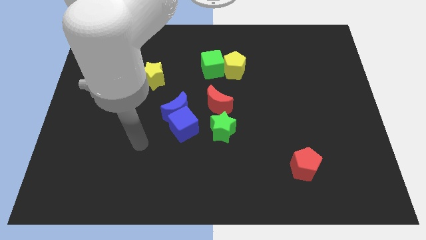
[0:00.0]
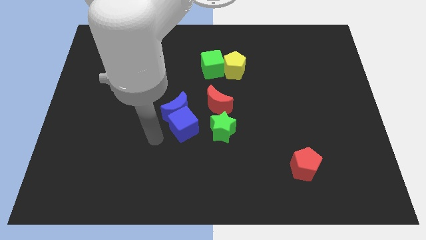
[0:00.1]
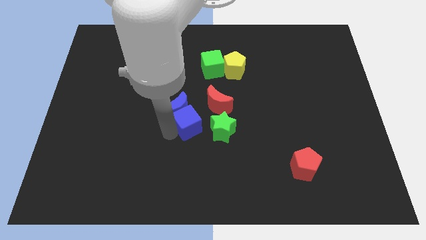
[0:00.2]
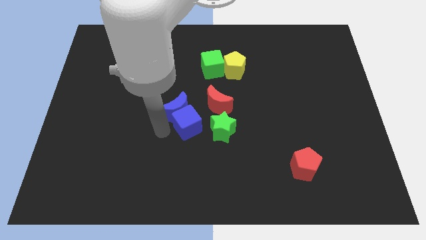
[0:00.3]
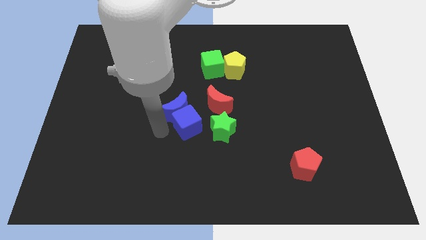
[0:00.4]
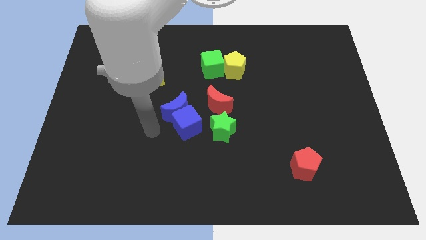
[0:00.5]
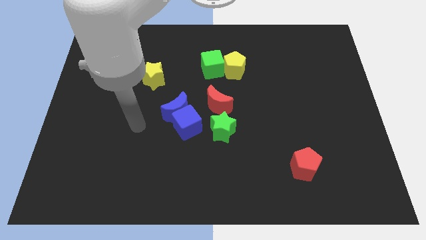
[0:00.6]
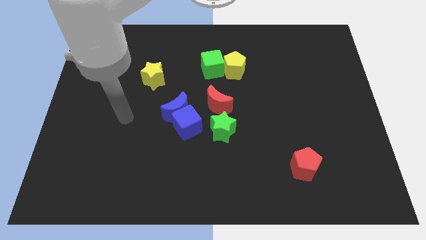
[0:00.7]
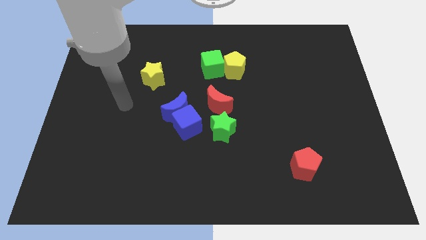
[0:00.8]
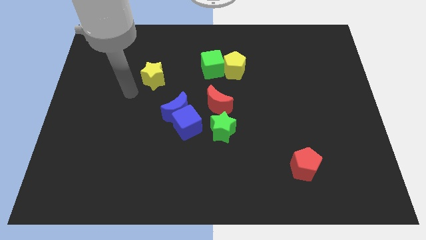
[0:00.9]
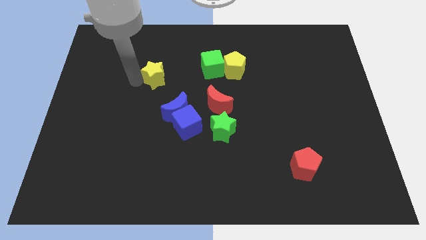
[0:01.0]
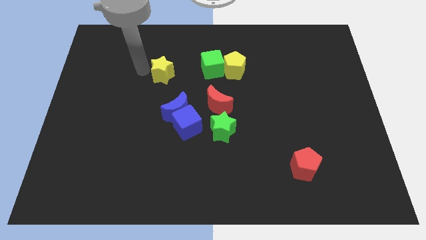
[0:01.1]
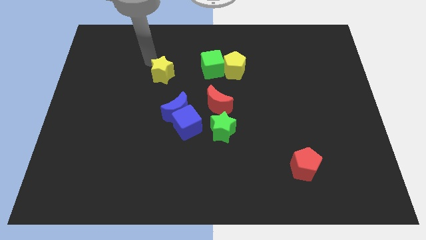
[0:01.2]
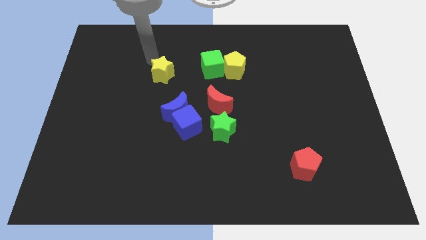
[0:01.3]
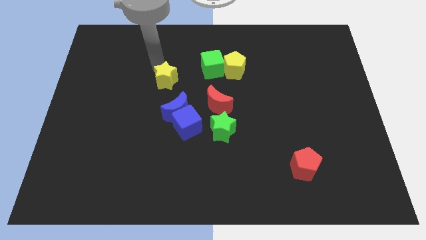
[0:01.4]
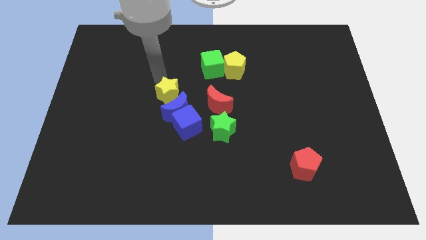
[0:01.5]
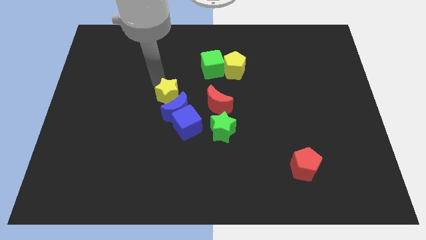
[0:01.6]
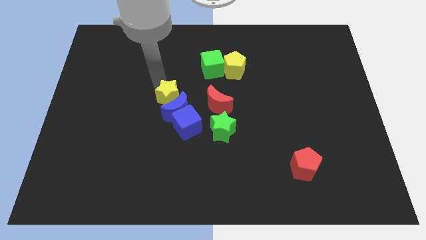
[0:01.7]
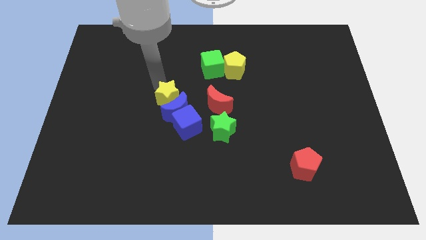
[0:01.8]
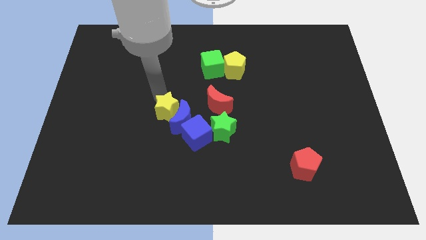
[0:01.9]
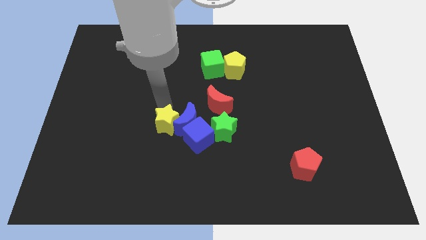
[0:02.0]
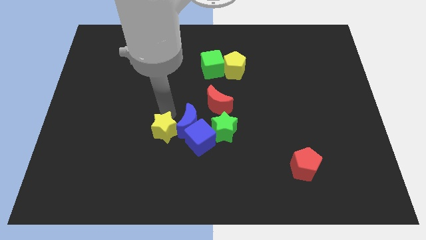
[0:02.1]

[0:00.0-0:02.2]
push the yellow star to the left side of the blue moon

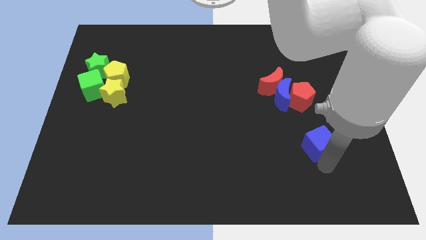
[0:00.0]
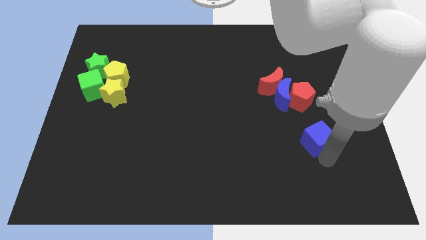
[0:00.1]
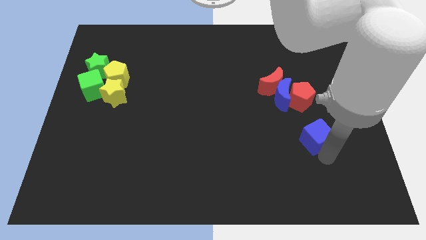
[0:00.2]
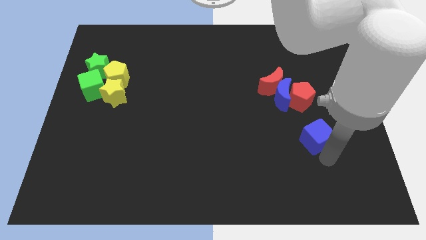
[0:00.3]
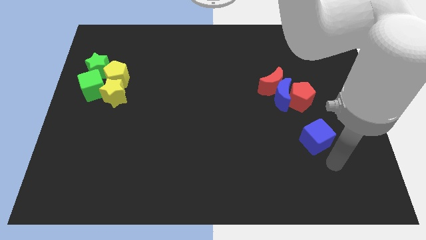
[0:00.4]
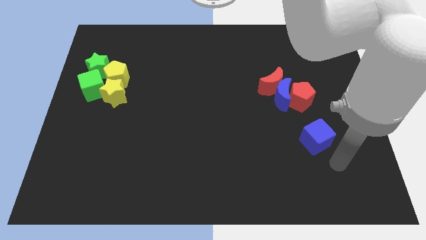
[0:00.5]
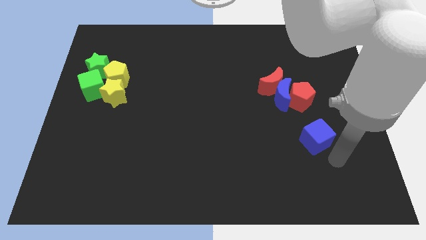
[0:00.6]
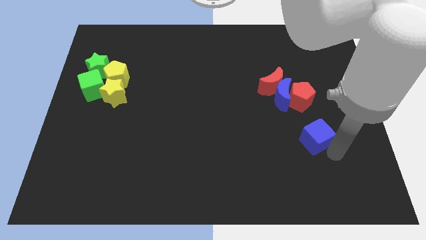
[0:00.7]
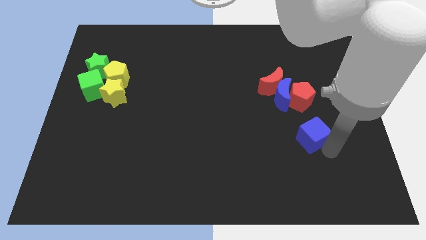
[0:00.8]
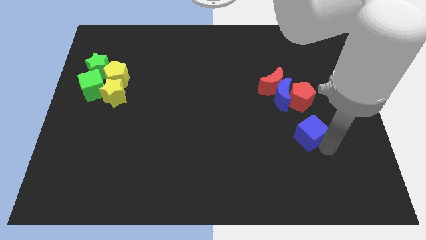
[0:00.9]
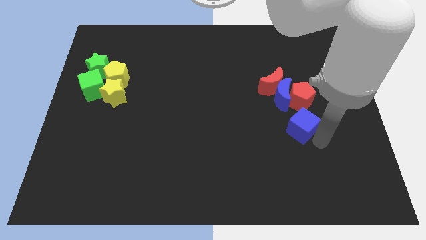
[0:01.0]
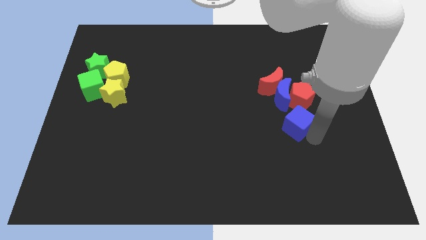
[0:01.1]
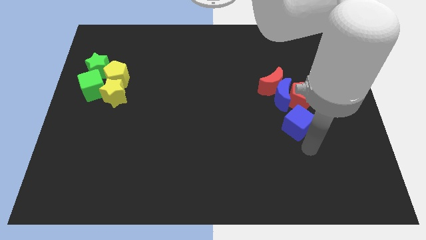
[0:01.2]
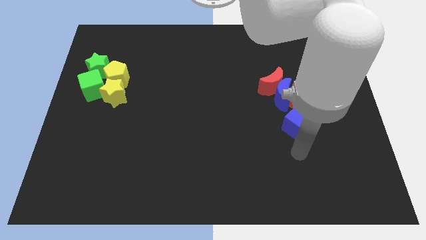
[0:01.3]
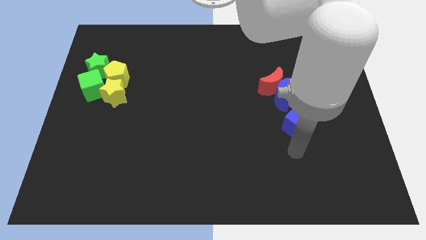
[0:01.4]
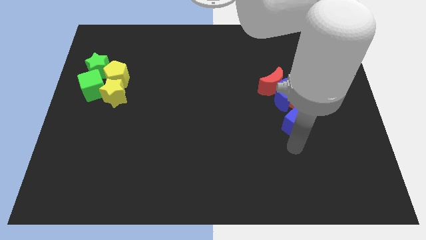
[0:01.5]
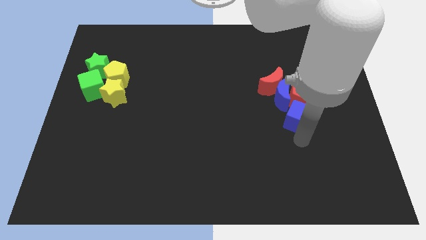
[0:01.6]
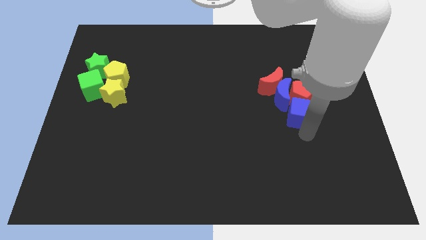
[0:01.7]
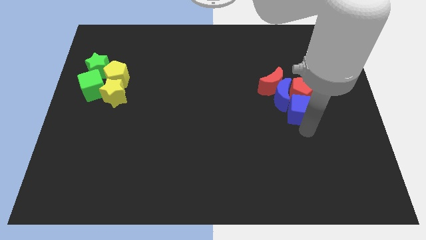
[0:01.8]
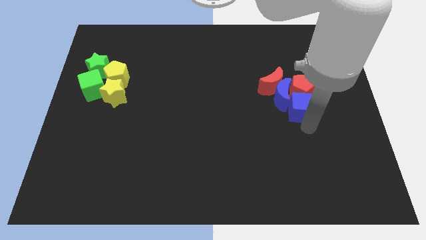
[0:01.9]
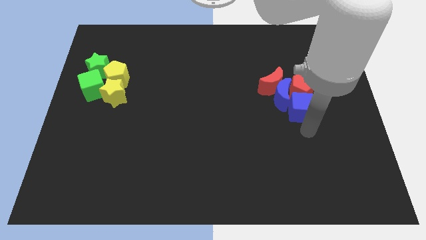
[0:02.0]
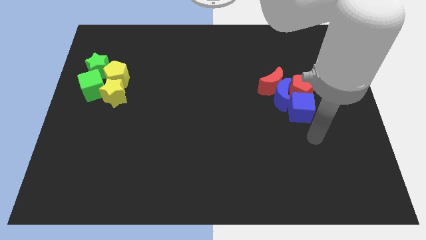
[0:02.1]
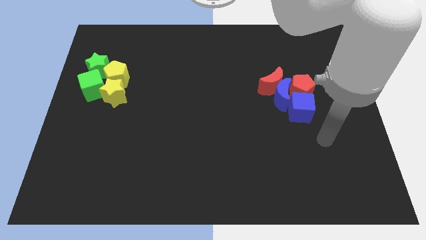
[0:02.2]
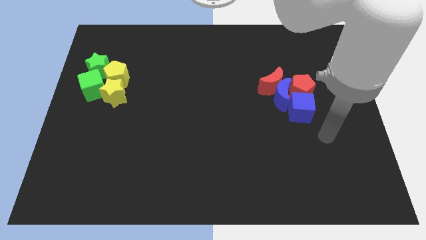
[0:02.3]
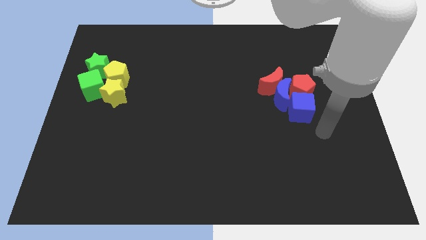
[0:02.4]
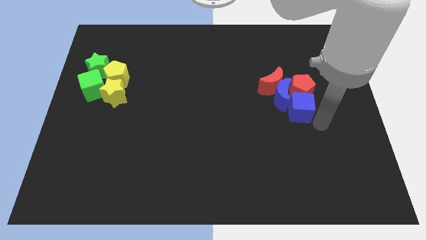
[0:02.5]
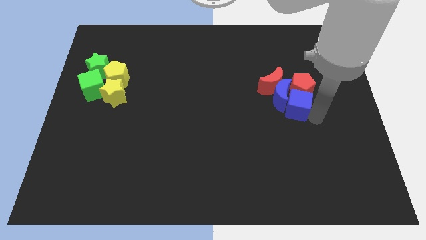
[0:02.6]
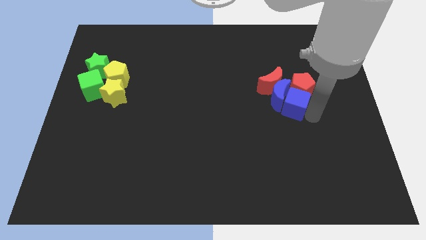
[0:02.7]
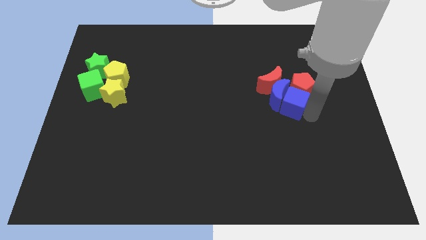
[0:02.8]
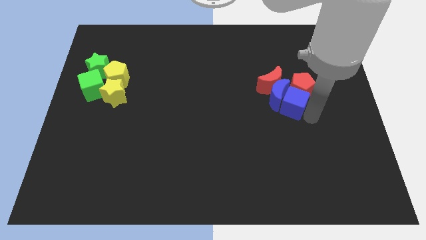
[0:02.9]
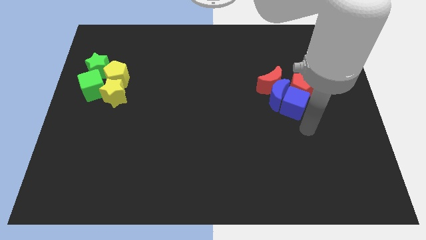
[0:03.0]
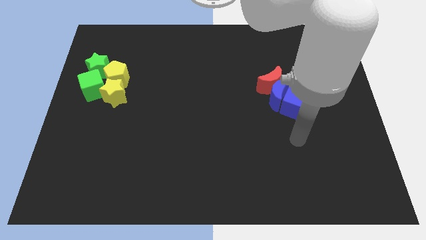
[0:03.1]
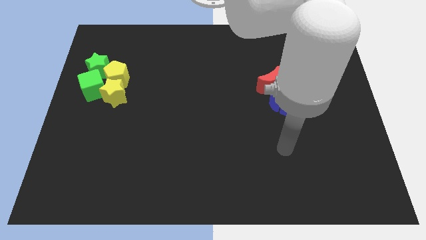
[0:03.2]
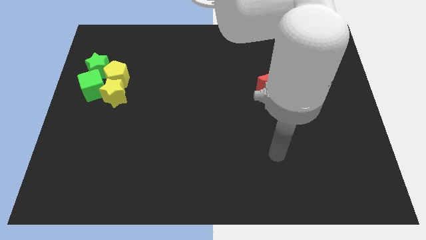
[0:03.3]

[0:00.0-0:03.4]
move the blue cube below the blue crescent

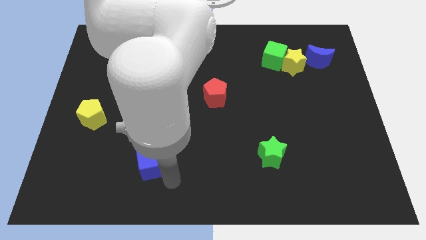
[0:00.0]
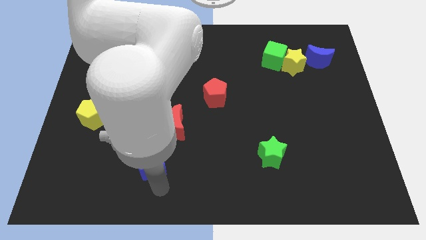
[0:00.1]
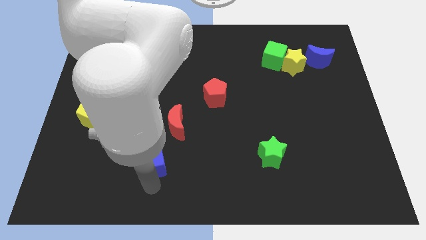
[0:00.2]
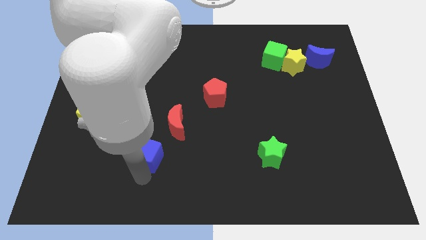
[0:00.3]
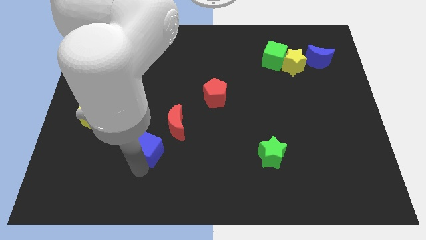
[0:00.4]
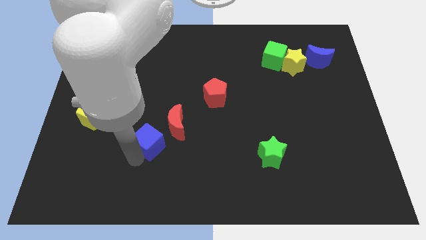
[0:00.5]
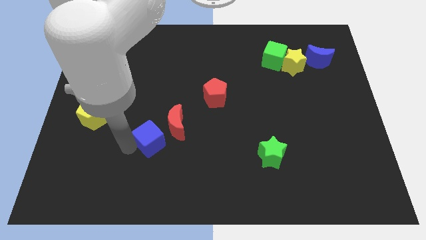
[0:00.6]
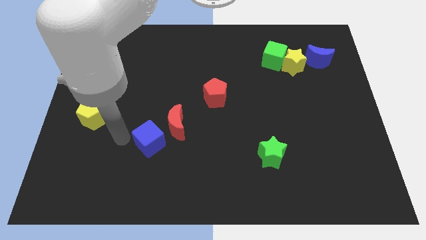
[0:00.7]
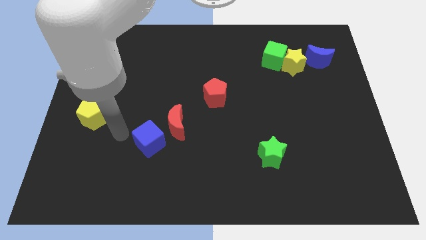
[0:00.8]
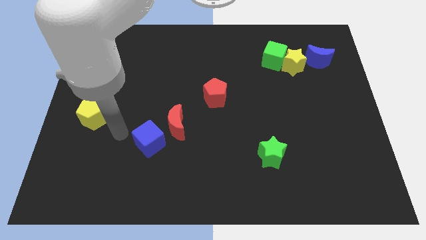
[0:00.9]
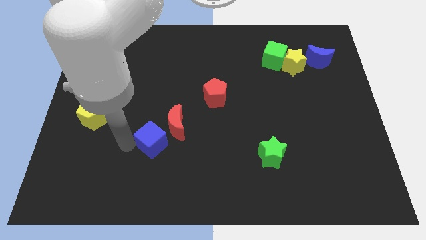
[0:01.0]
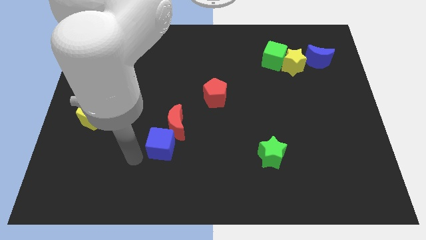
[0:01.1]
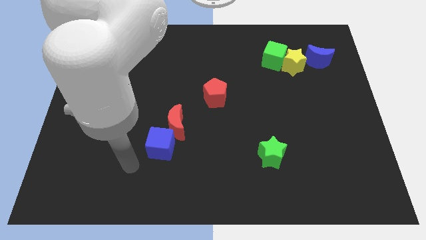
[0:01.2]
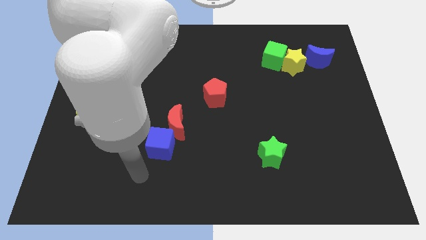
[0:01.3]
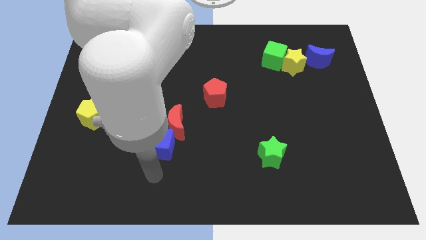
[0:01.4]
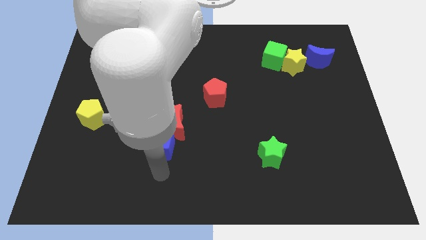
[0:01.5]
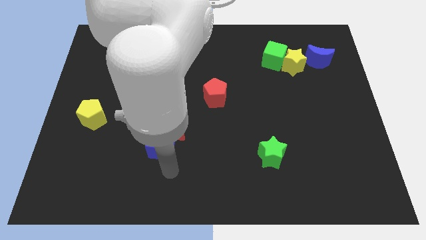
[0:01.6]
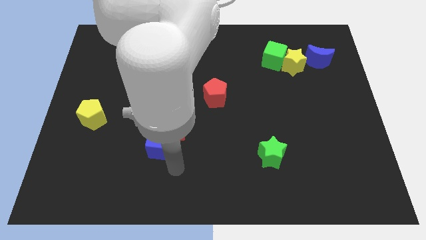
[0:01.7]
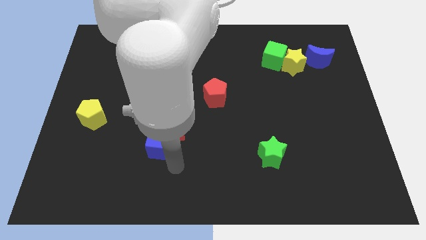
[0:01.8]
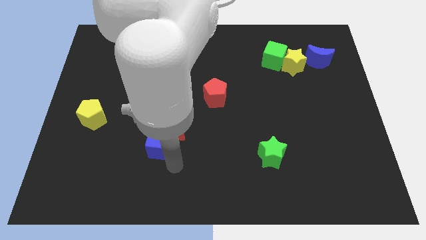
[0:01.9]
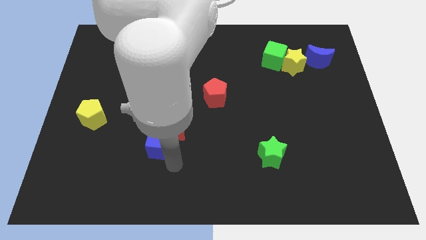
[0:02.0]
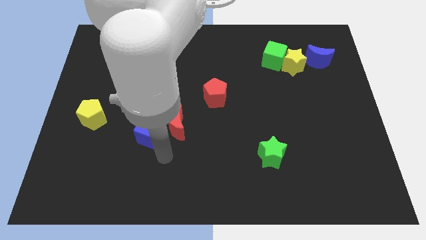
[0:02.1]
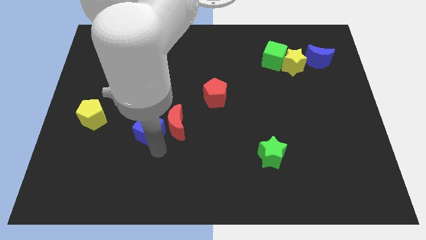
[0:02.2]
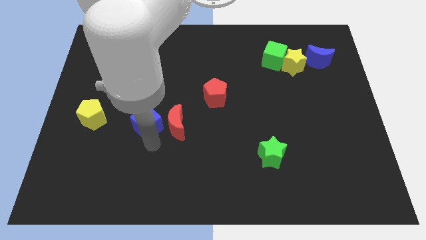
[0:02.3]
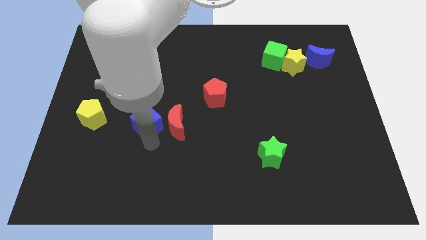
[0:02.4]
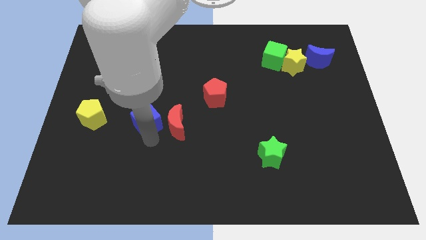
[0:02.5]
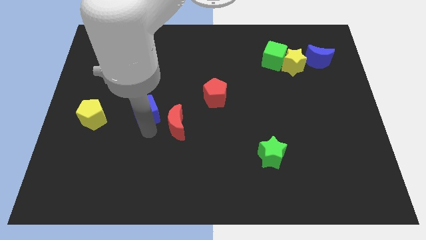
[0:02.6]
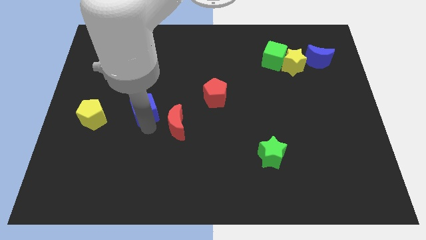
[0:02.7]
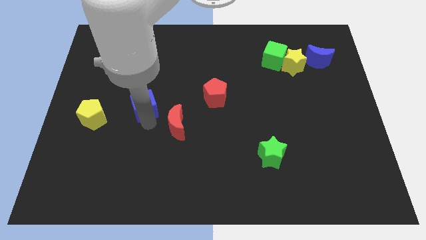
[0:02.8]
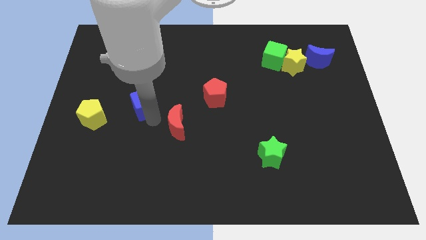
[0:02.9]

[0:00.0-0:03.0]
move the blue cube to the top left side of the red moon

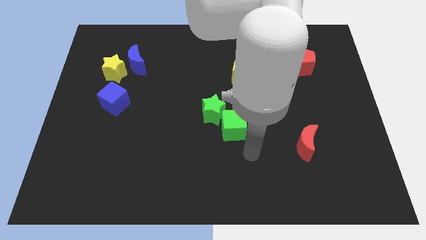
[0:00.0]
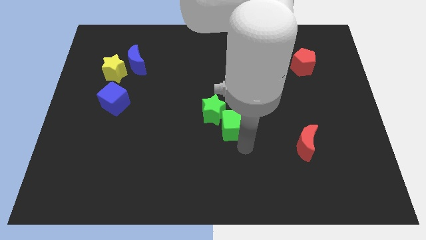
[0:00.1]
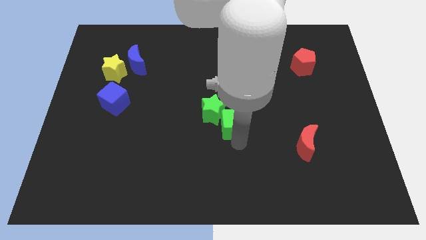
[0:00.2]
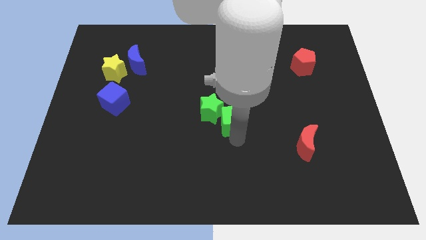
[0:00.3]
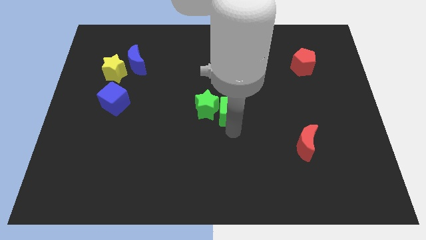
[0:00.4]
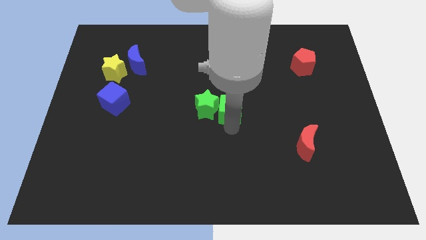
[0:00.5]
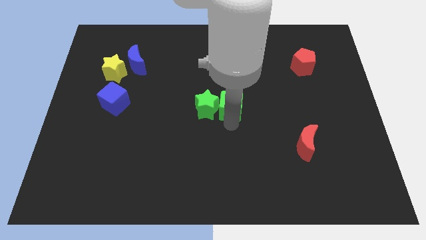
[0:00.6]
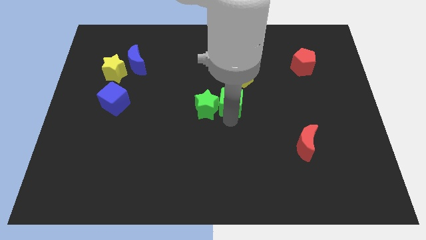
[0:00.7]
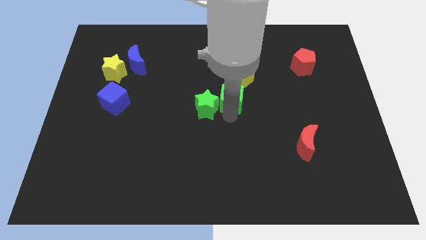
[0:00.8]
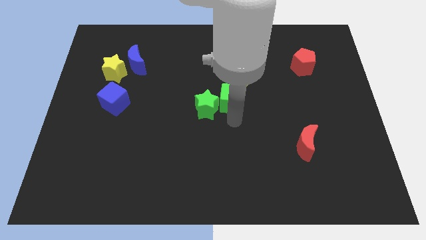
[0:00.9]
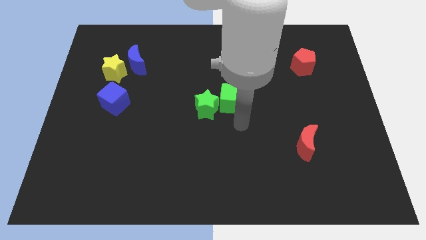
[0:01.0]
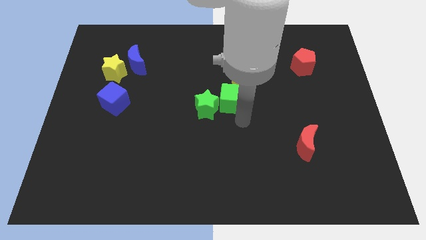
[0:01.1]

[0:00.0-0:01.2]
move the green cube towards the right of the green star
